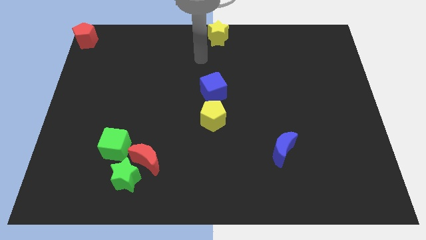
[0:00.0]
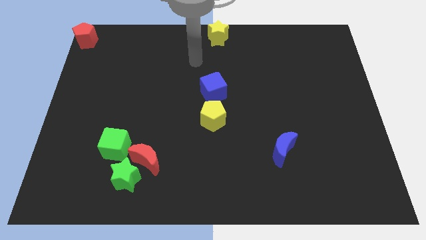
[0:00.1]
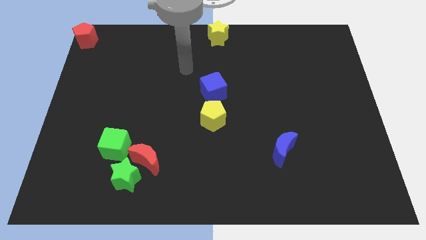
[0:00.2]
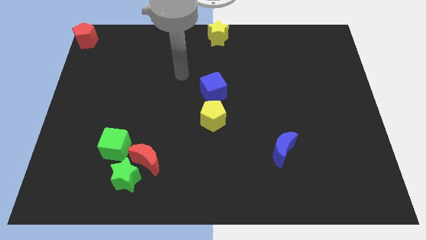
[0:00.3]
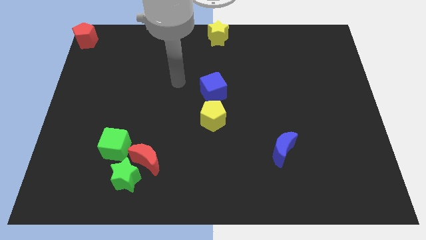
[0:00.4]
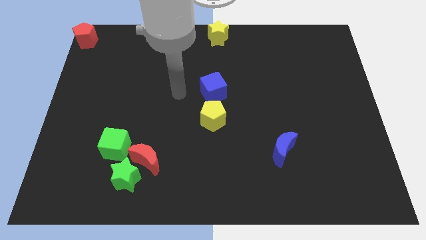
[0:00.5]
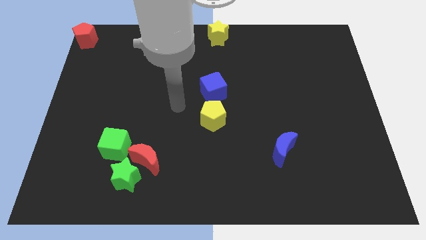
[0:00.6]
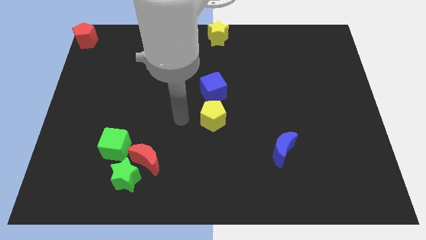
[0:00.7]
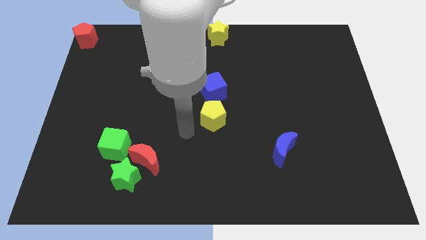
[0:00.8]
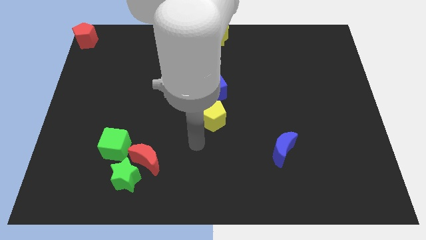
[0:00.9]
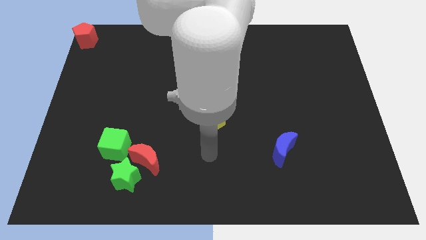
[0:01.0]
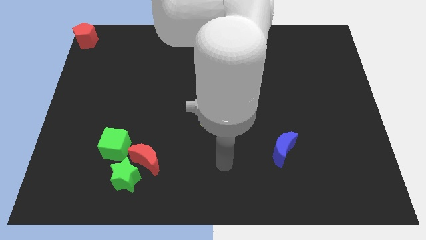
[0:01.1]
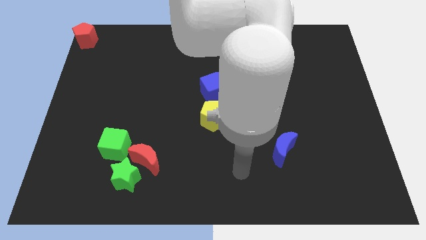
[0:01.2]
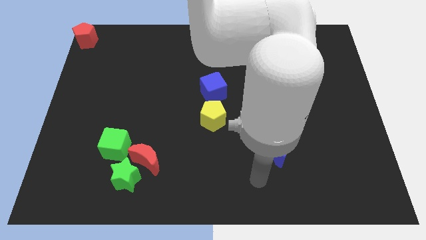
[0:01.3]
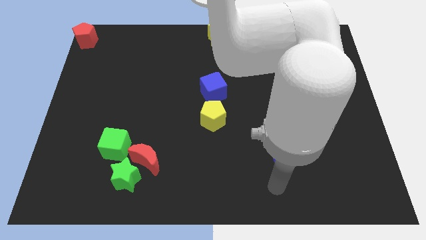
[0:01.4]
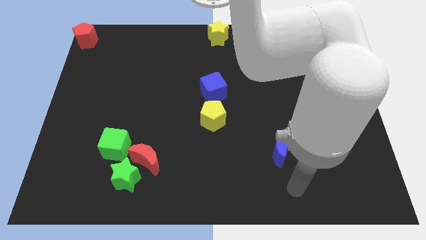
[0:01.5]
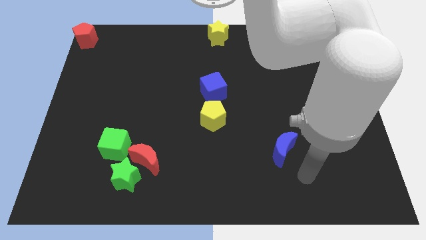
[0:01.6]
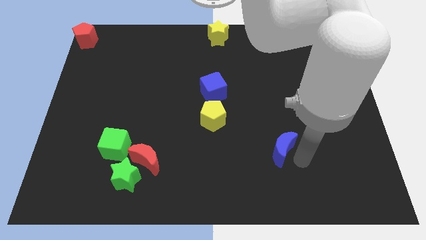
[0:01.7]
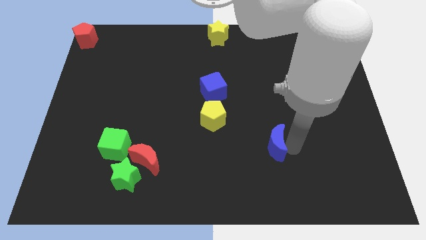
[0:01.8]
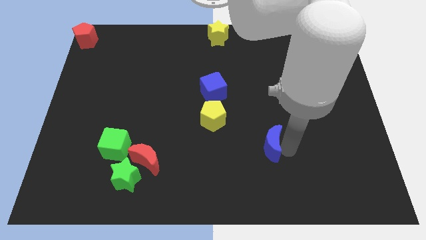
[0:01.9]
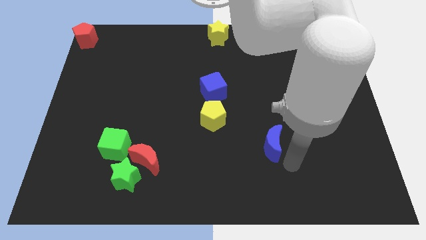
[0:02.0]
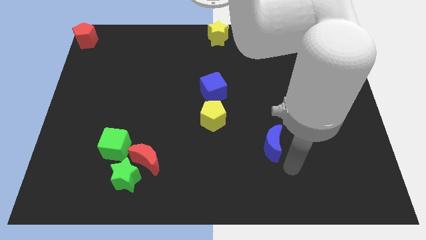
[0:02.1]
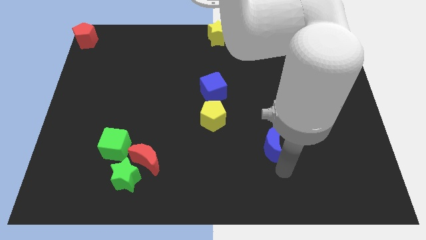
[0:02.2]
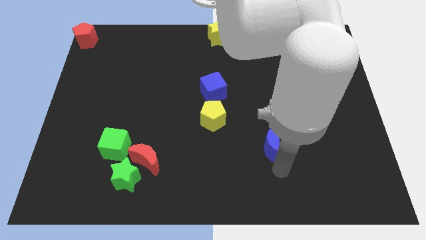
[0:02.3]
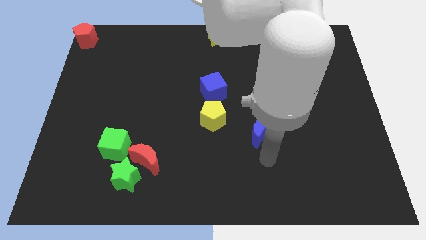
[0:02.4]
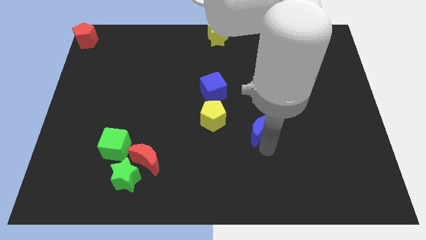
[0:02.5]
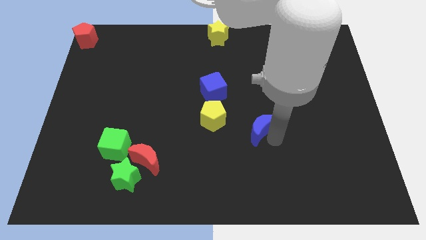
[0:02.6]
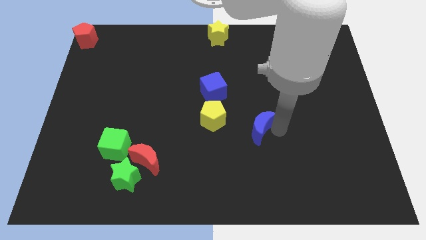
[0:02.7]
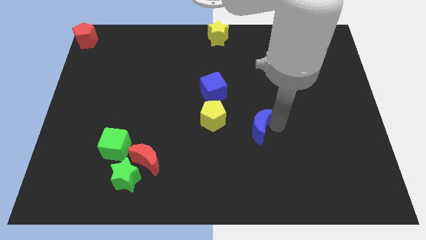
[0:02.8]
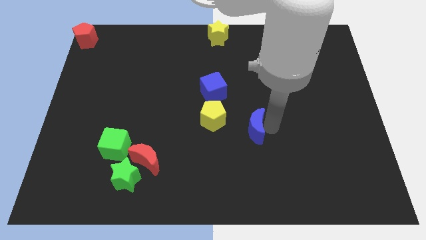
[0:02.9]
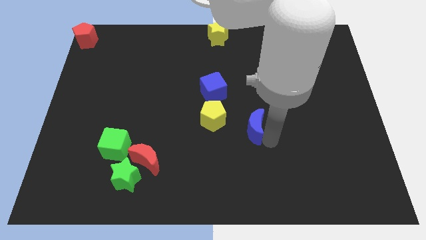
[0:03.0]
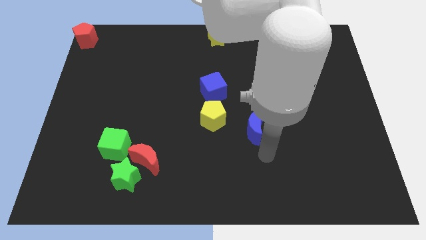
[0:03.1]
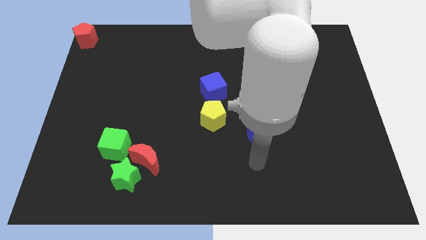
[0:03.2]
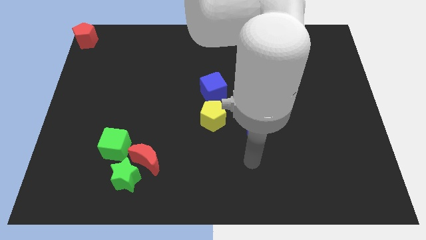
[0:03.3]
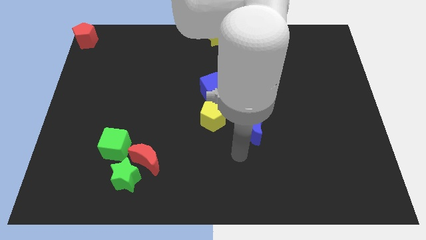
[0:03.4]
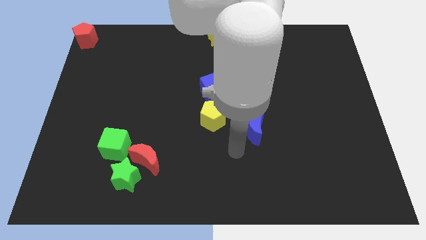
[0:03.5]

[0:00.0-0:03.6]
move the blue crescent to the right of the yellow pentagon

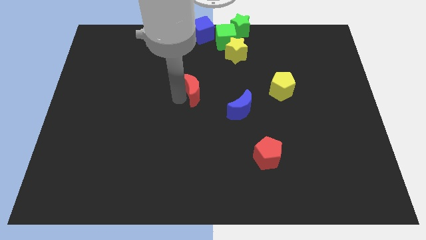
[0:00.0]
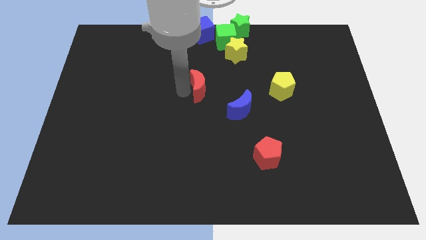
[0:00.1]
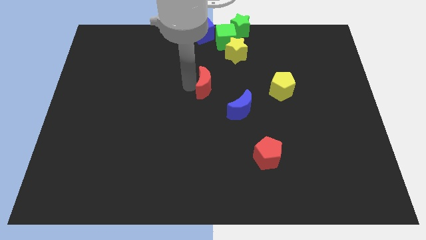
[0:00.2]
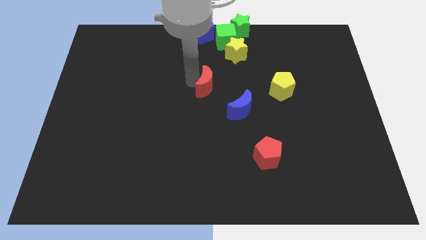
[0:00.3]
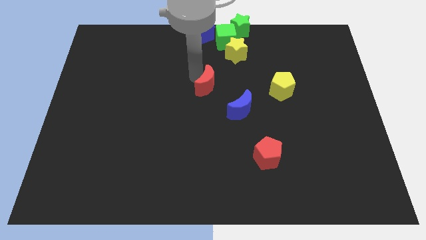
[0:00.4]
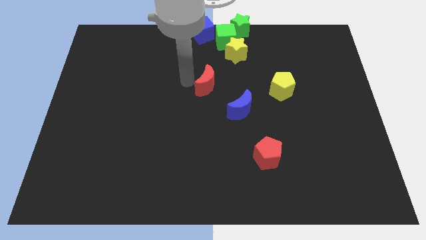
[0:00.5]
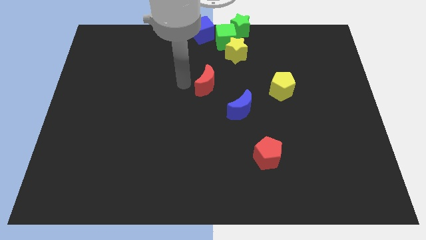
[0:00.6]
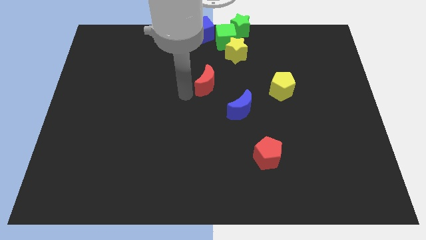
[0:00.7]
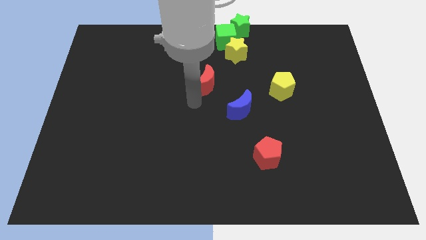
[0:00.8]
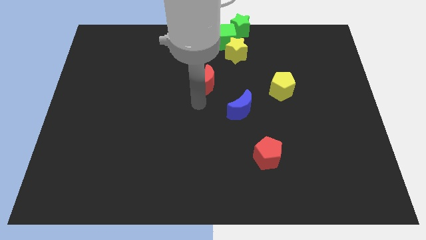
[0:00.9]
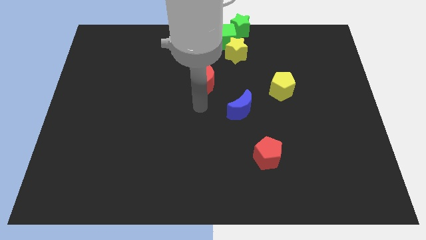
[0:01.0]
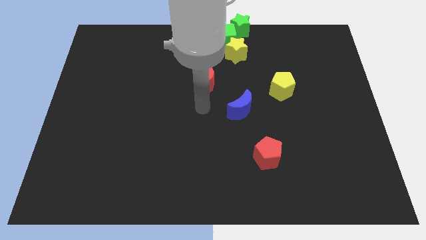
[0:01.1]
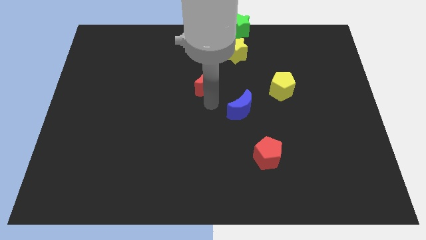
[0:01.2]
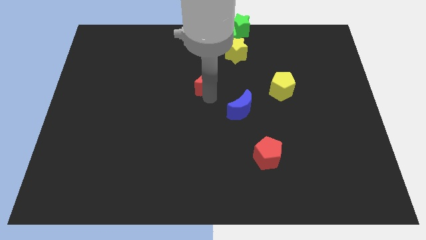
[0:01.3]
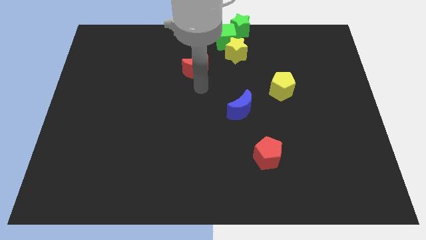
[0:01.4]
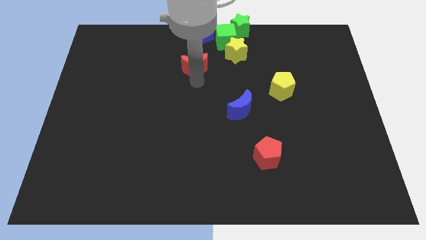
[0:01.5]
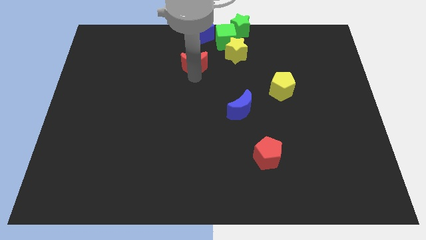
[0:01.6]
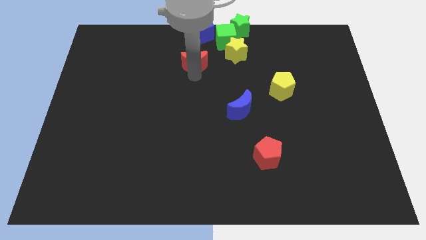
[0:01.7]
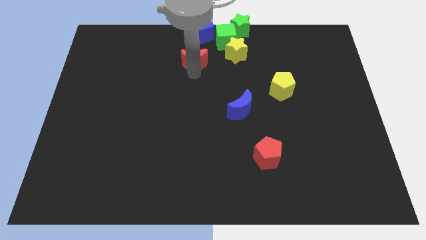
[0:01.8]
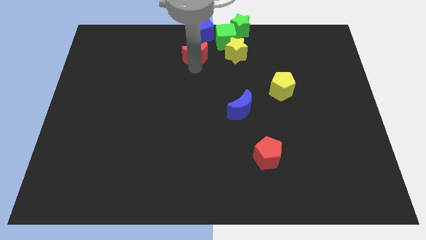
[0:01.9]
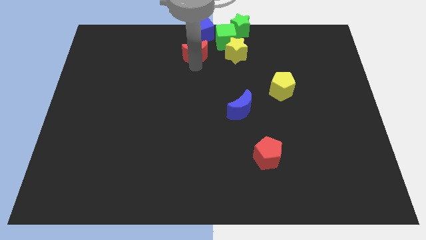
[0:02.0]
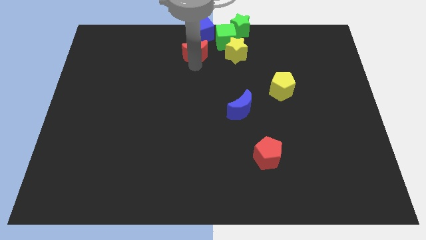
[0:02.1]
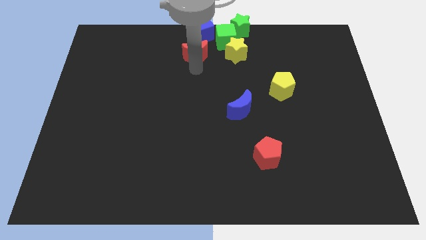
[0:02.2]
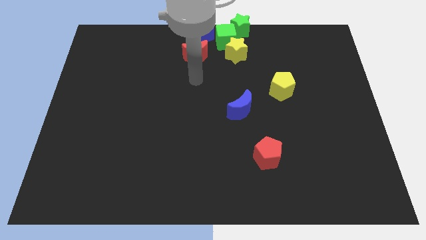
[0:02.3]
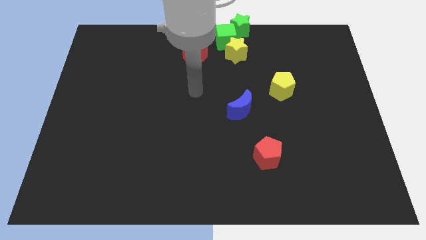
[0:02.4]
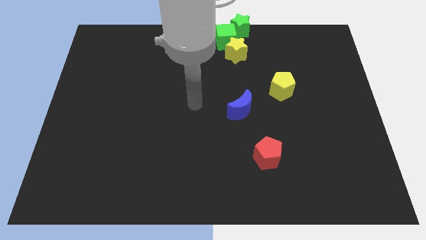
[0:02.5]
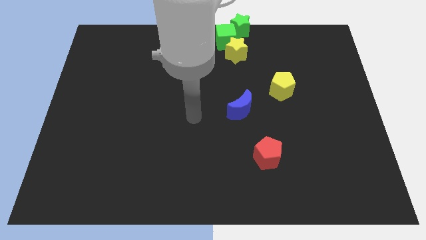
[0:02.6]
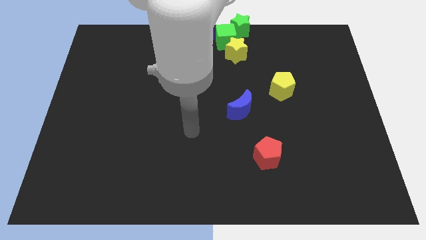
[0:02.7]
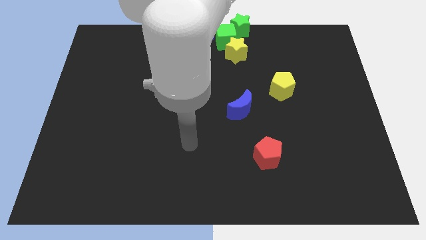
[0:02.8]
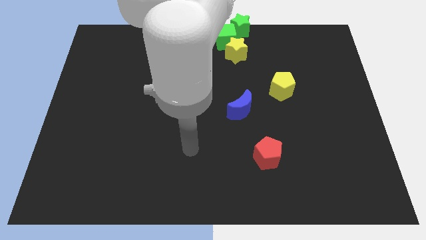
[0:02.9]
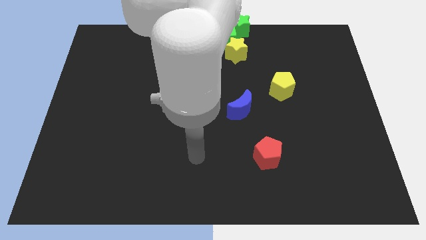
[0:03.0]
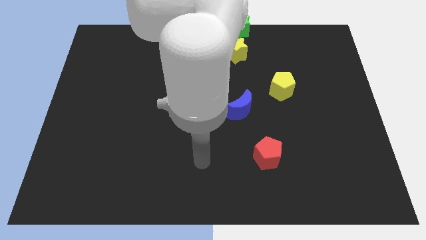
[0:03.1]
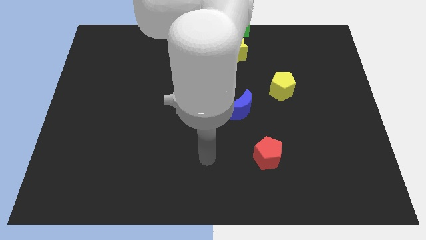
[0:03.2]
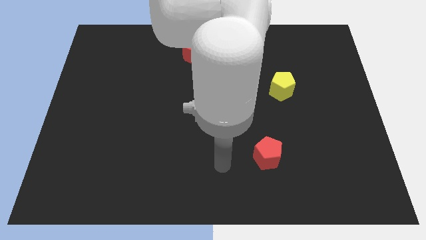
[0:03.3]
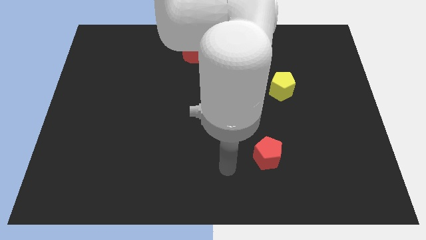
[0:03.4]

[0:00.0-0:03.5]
put the red moon parallel left to the yellow star

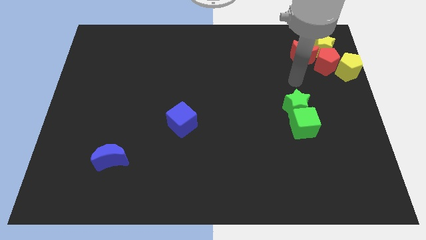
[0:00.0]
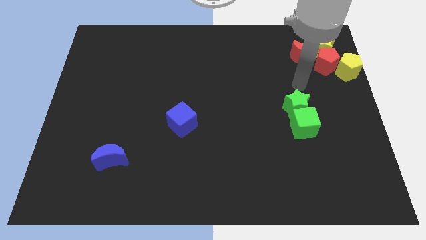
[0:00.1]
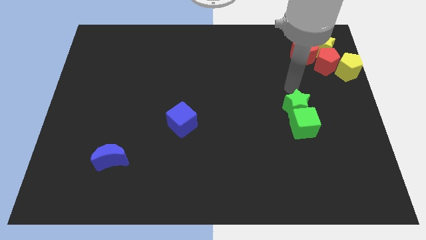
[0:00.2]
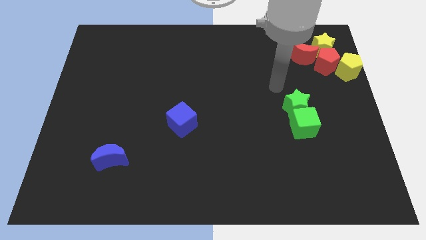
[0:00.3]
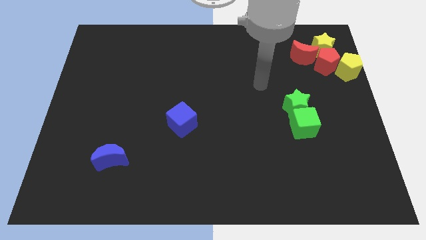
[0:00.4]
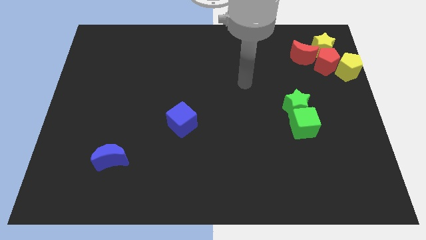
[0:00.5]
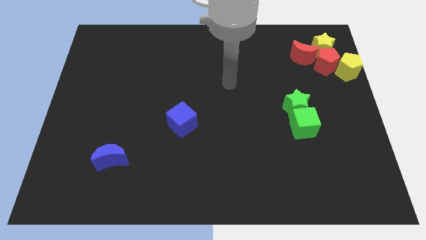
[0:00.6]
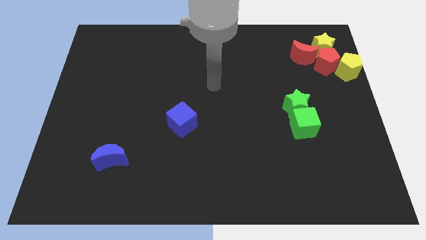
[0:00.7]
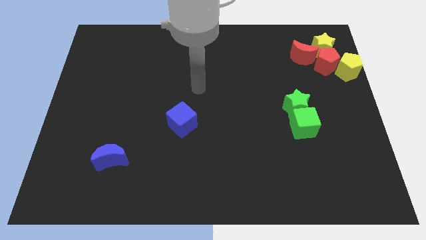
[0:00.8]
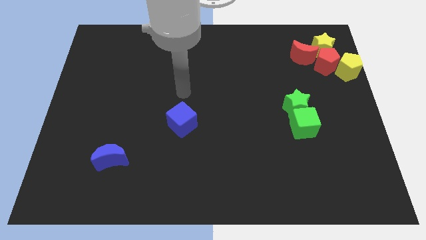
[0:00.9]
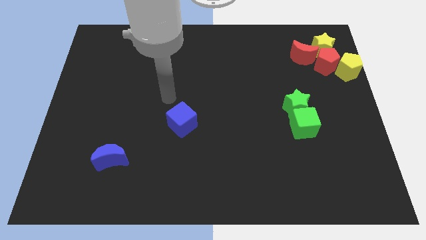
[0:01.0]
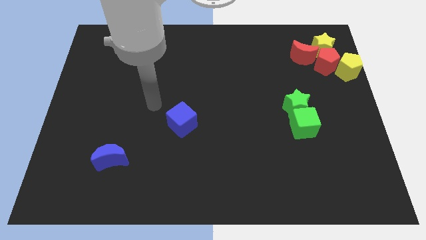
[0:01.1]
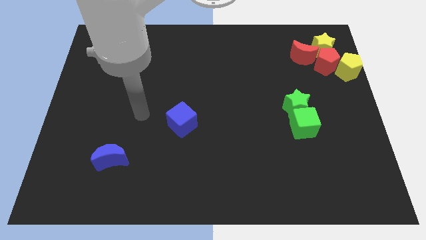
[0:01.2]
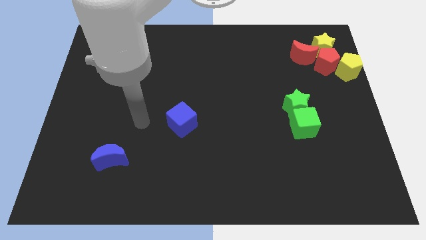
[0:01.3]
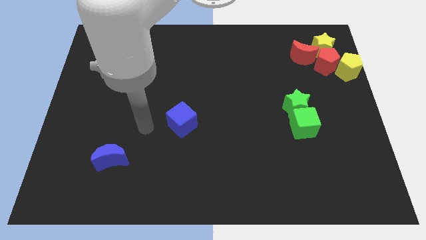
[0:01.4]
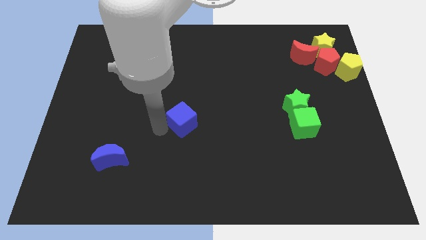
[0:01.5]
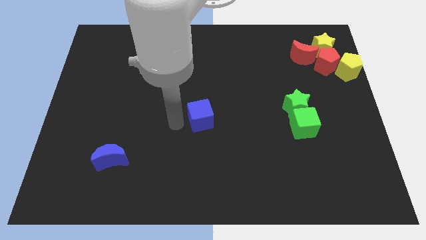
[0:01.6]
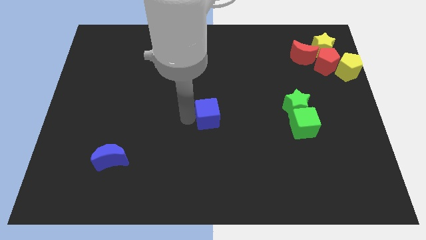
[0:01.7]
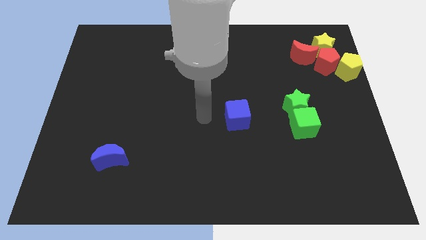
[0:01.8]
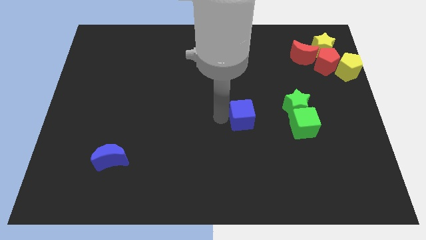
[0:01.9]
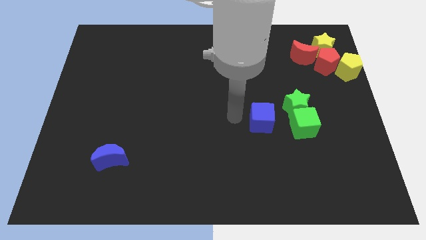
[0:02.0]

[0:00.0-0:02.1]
push the blue cube towards the green cube
